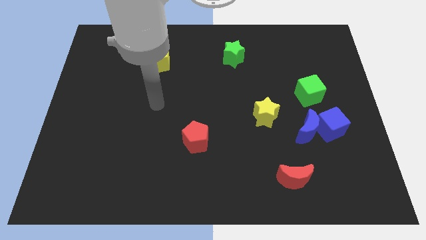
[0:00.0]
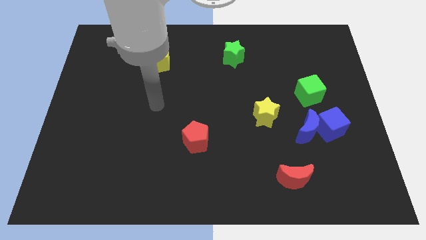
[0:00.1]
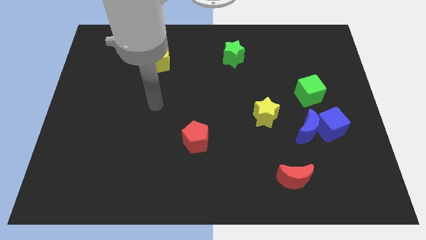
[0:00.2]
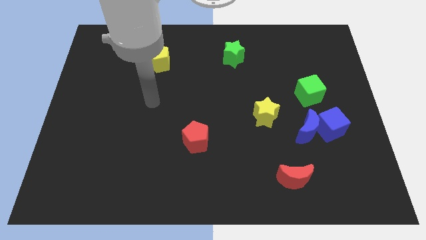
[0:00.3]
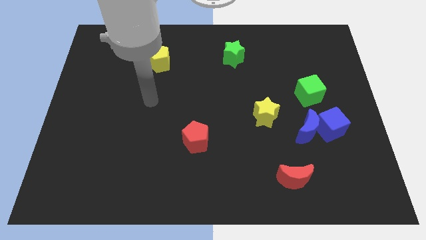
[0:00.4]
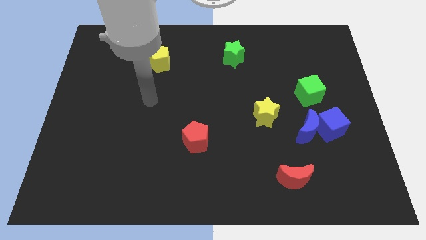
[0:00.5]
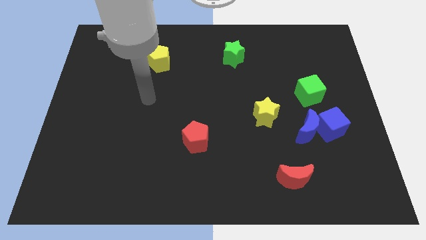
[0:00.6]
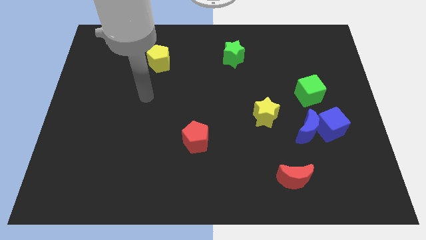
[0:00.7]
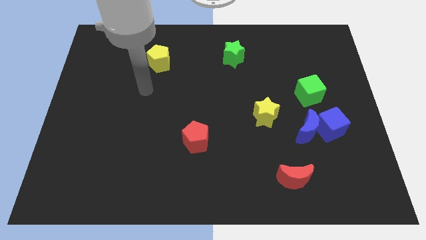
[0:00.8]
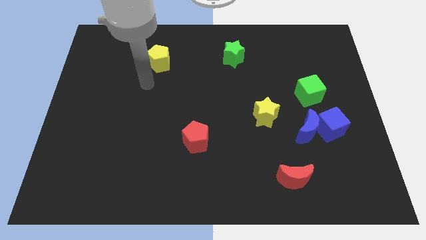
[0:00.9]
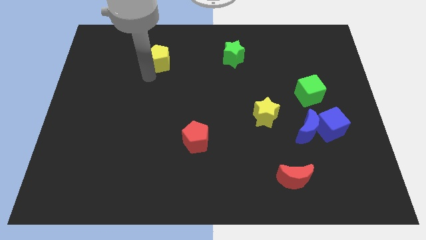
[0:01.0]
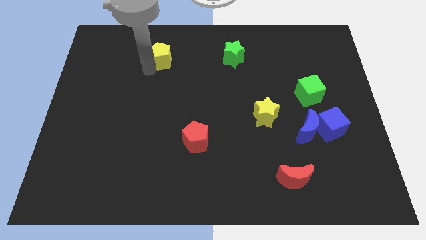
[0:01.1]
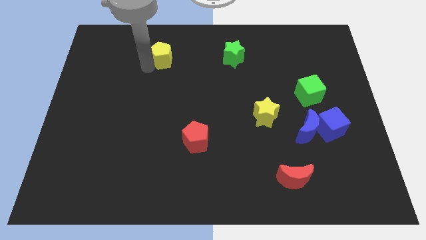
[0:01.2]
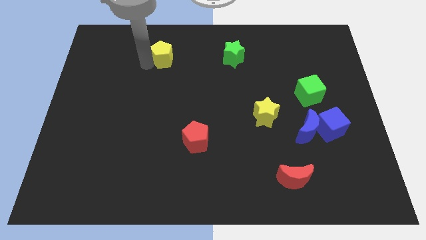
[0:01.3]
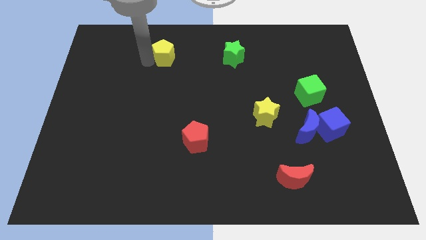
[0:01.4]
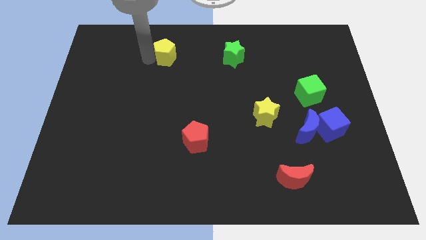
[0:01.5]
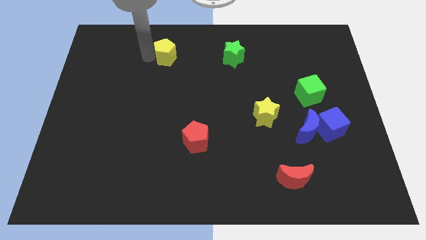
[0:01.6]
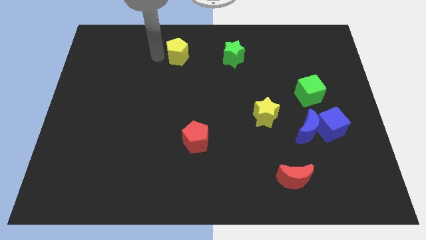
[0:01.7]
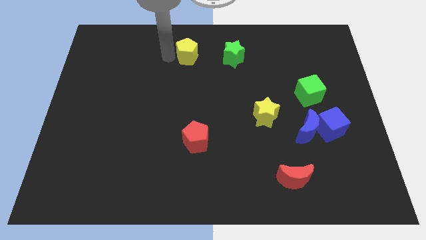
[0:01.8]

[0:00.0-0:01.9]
push the yellow pentagon to the left of green star

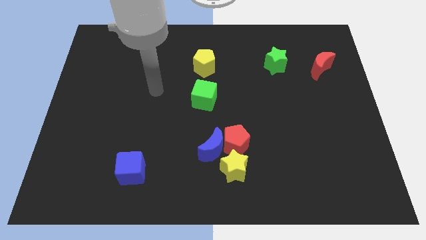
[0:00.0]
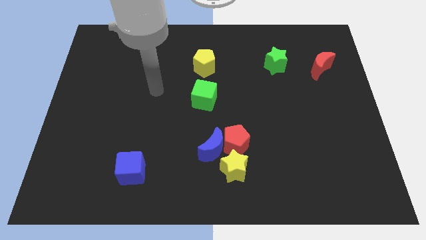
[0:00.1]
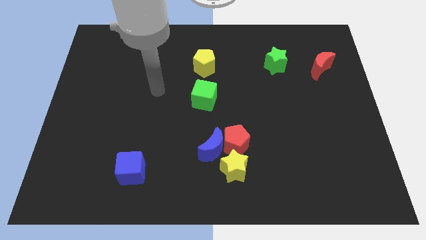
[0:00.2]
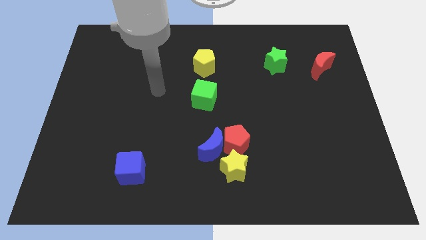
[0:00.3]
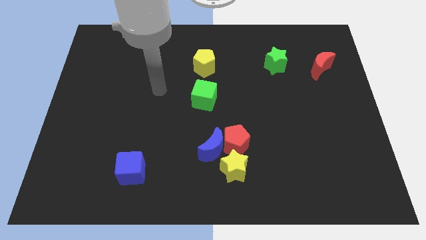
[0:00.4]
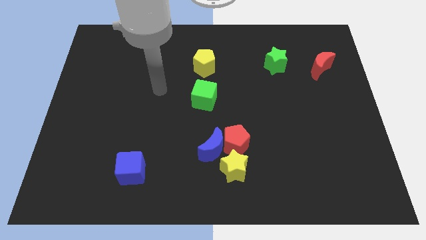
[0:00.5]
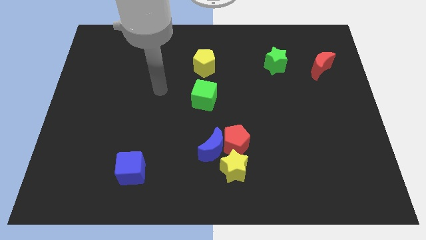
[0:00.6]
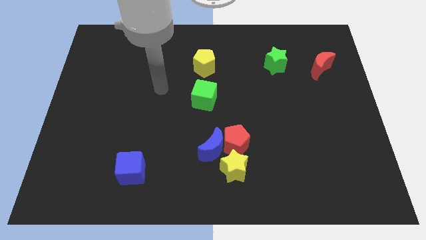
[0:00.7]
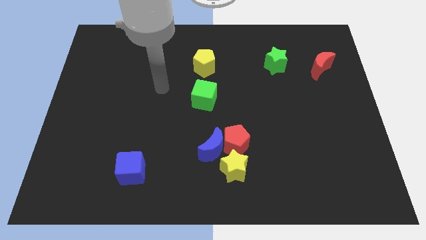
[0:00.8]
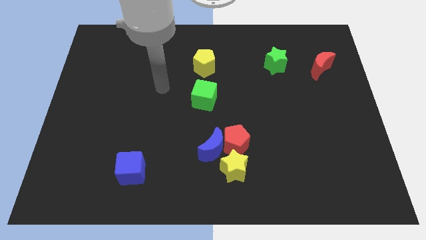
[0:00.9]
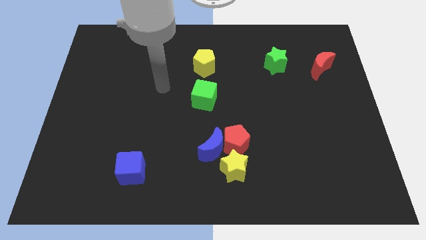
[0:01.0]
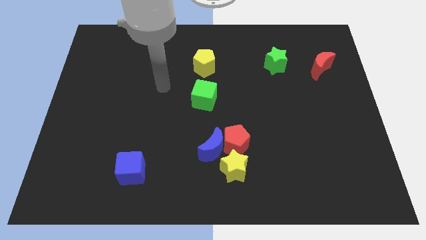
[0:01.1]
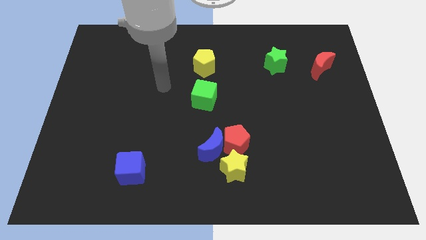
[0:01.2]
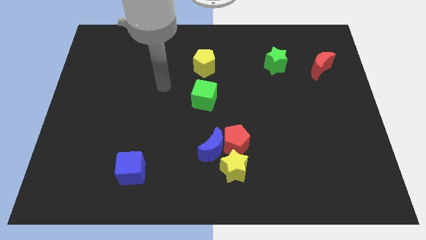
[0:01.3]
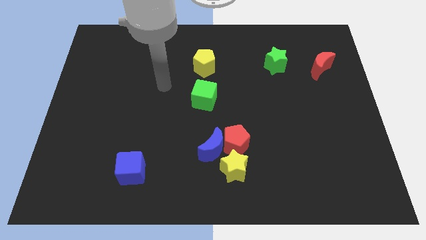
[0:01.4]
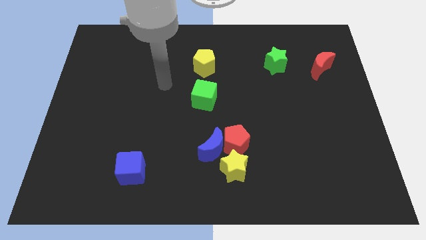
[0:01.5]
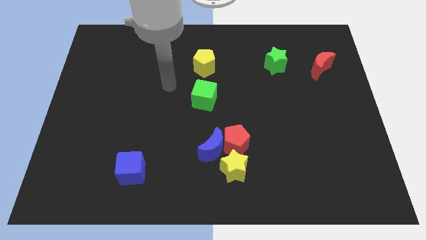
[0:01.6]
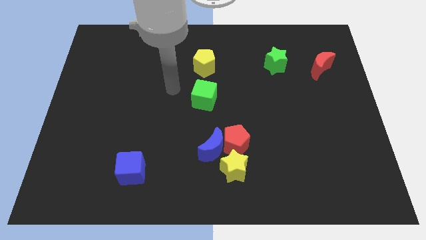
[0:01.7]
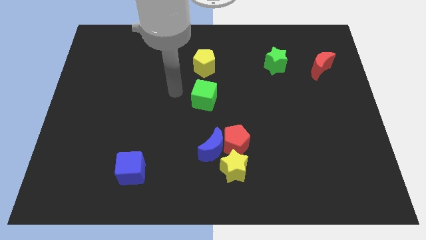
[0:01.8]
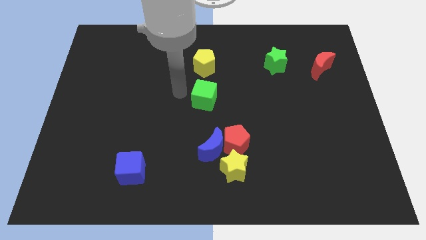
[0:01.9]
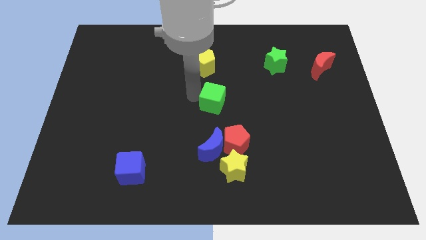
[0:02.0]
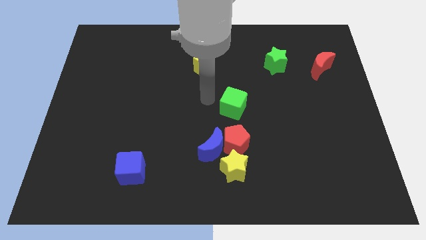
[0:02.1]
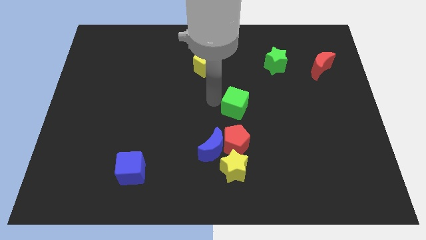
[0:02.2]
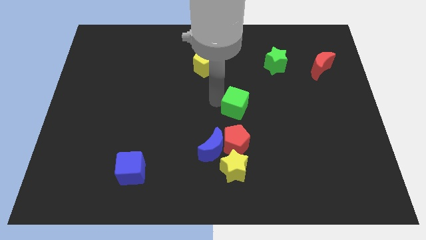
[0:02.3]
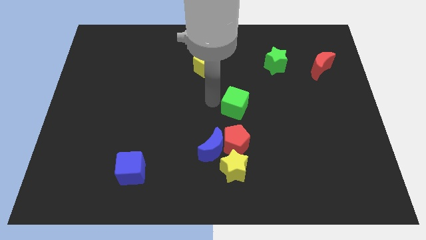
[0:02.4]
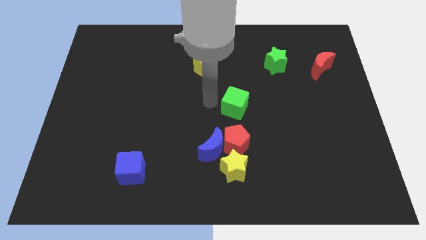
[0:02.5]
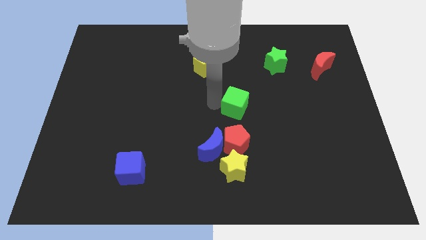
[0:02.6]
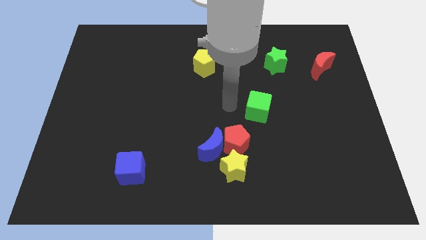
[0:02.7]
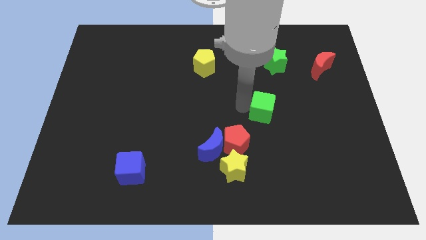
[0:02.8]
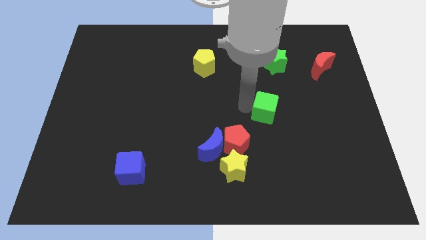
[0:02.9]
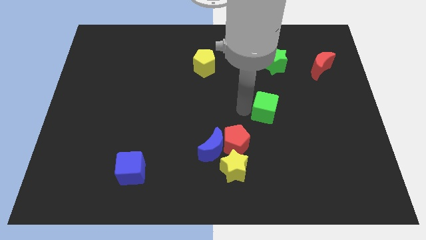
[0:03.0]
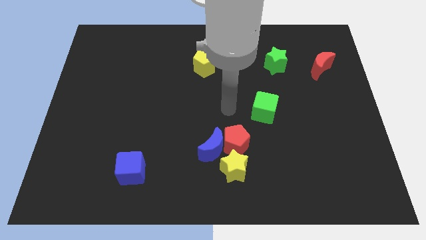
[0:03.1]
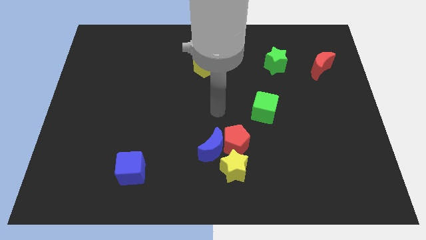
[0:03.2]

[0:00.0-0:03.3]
push the green cube towards the center right

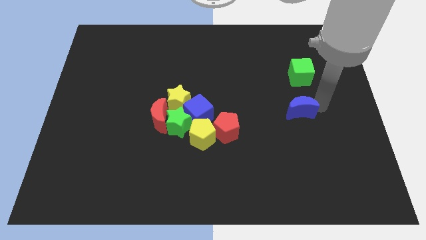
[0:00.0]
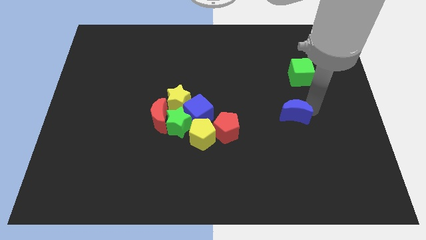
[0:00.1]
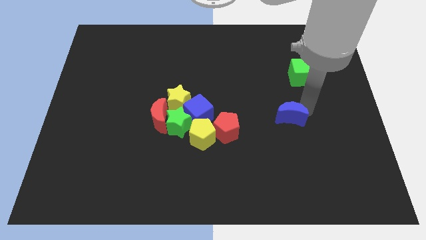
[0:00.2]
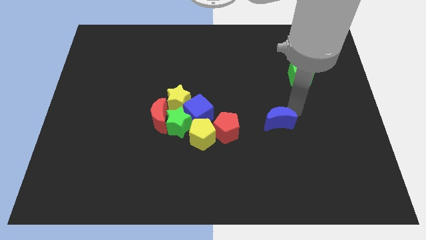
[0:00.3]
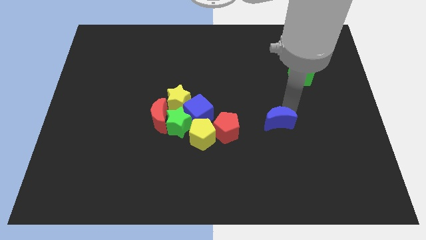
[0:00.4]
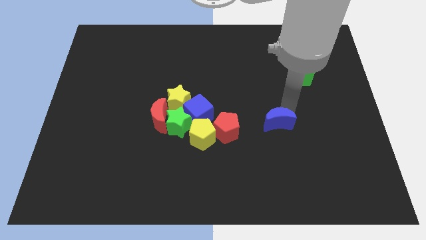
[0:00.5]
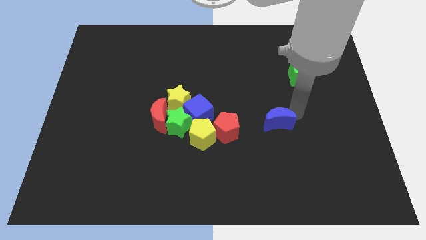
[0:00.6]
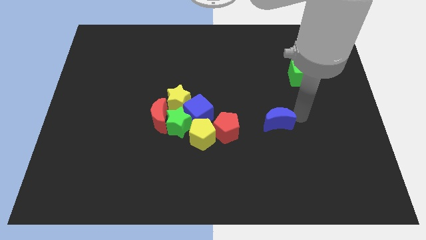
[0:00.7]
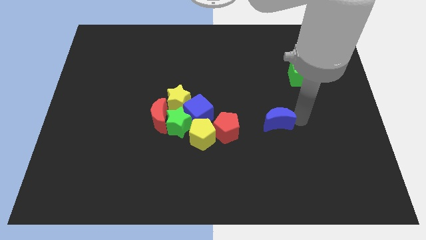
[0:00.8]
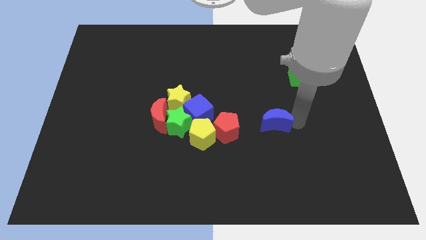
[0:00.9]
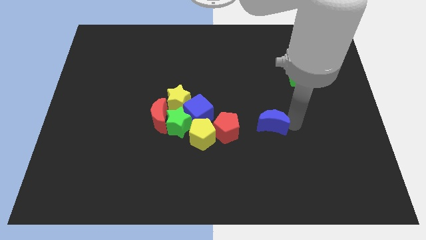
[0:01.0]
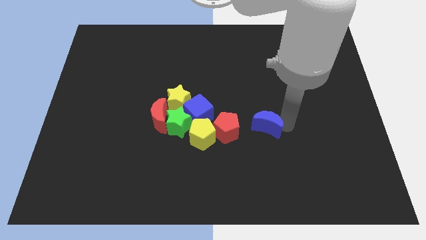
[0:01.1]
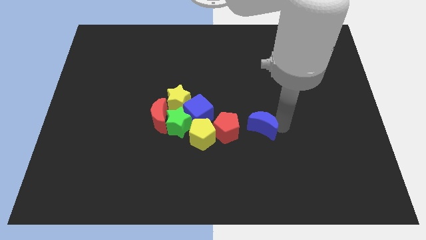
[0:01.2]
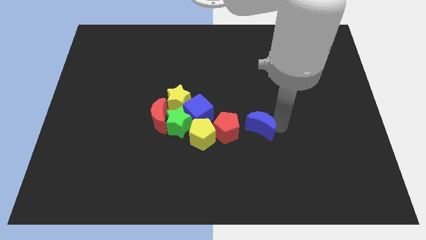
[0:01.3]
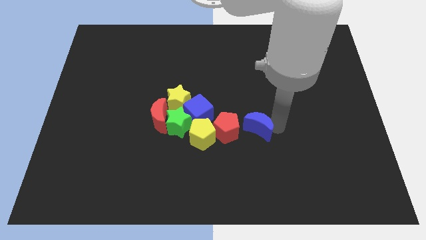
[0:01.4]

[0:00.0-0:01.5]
drag the blue cube close to the red pentagon

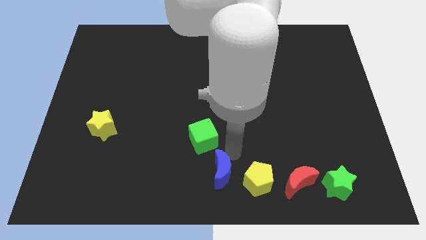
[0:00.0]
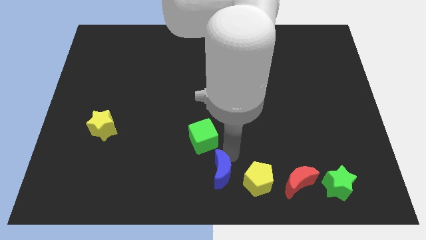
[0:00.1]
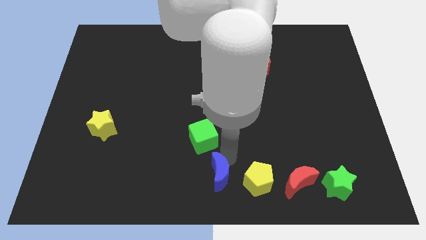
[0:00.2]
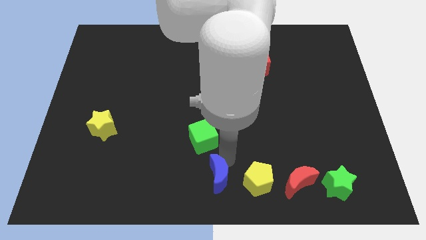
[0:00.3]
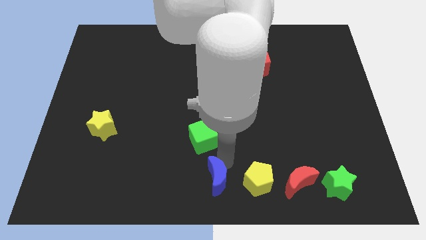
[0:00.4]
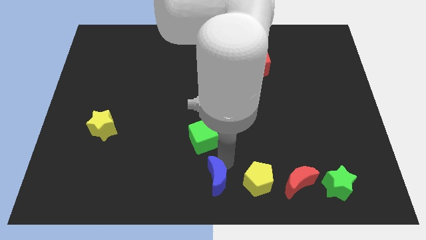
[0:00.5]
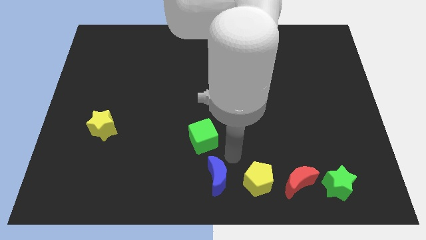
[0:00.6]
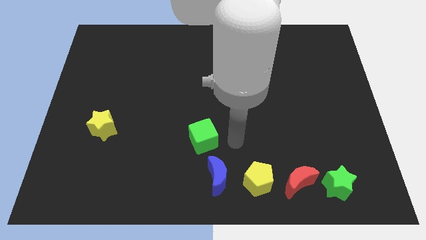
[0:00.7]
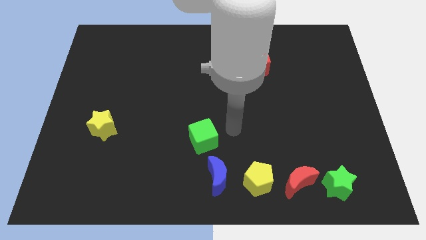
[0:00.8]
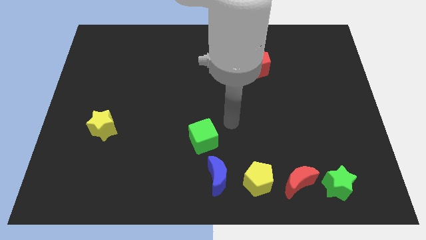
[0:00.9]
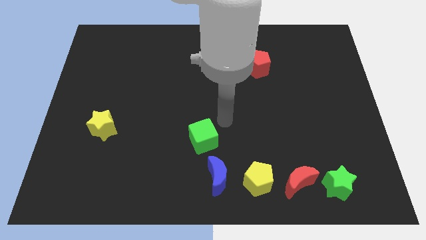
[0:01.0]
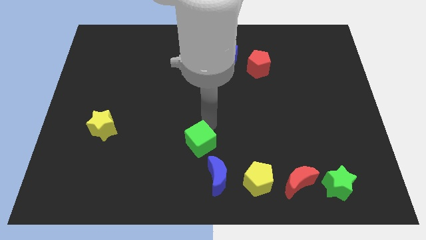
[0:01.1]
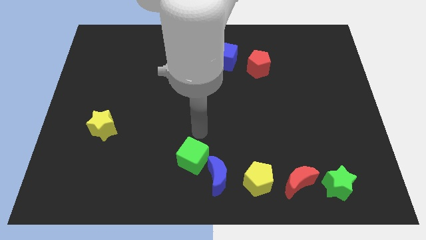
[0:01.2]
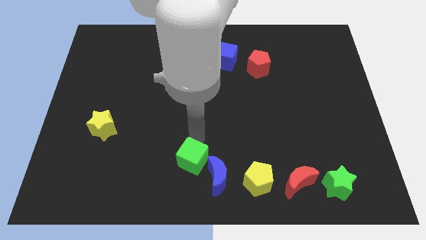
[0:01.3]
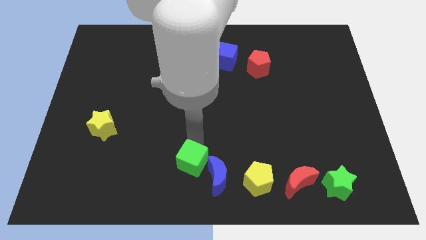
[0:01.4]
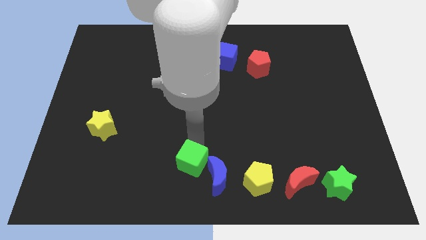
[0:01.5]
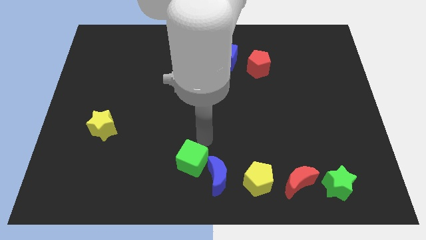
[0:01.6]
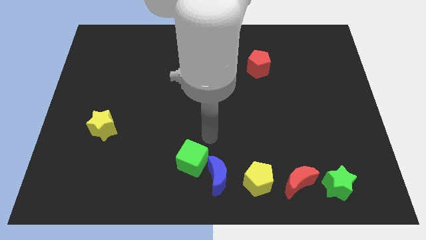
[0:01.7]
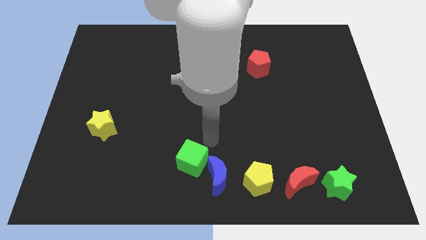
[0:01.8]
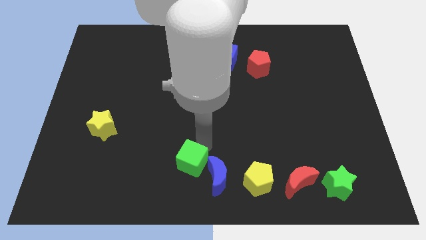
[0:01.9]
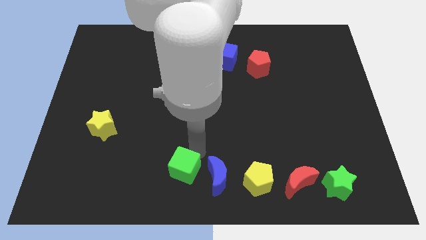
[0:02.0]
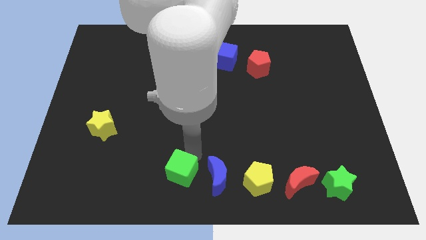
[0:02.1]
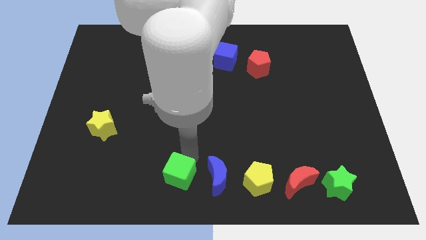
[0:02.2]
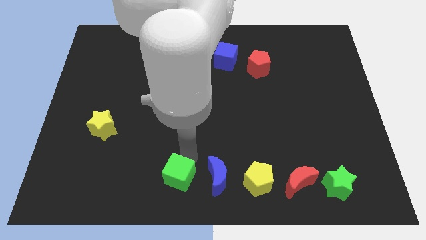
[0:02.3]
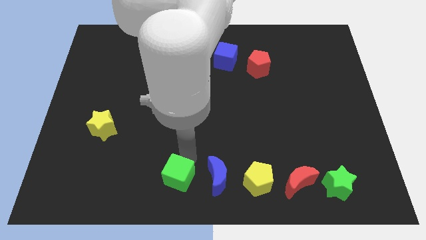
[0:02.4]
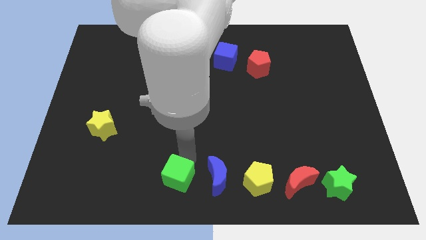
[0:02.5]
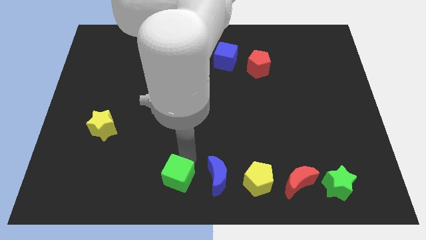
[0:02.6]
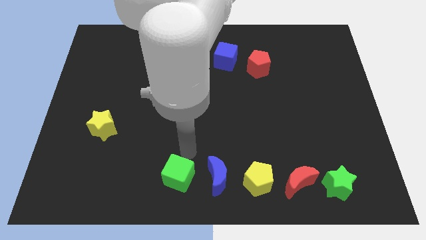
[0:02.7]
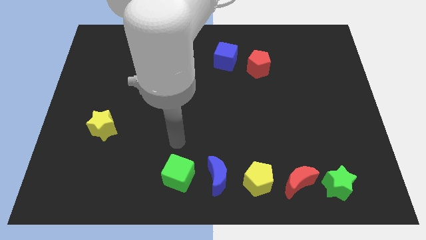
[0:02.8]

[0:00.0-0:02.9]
push the green cube to the bottom center
